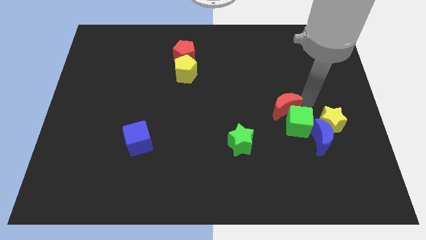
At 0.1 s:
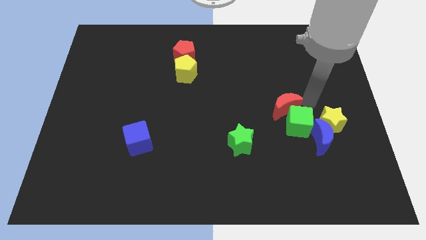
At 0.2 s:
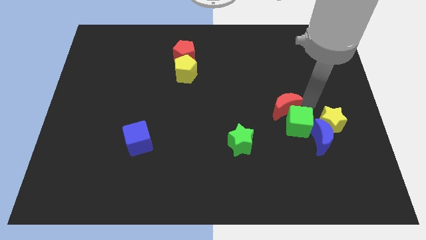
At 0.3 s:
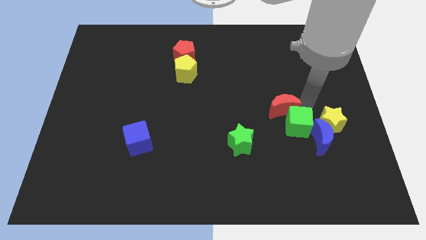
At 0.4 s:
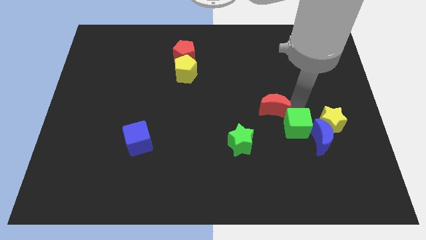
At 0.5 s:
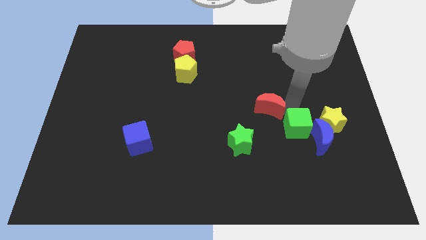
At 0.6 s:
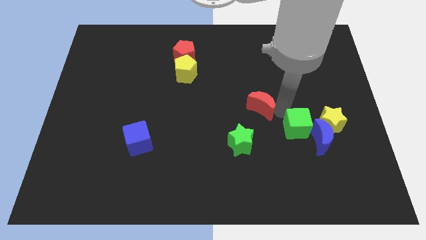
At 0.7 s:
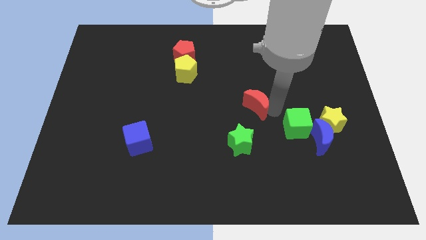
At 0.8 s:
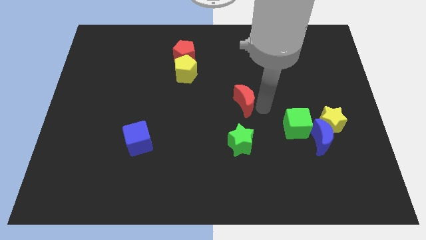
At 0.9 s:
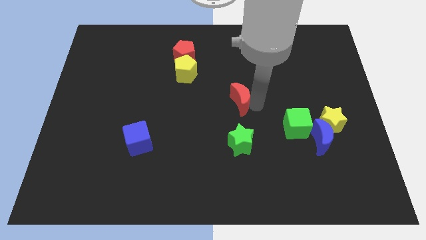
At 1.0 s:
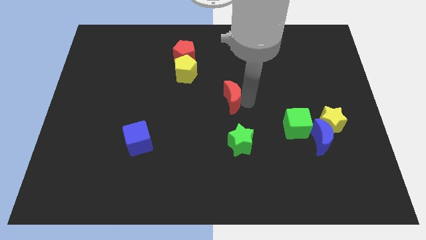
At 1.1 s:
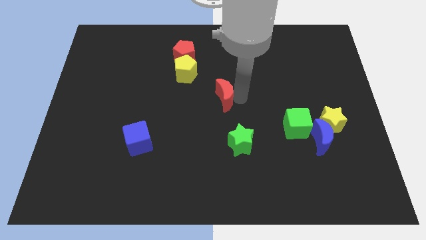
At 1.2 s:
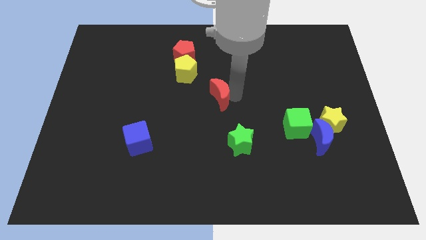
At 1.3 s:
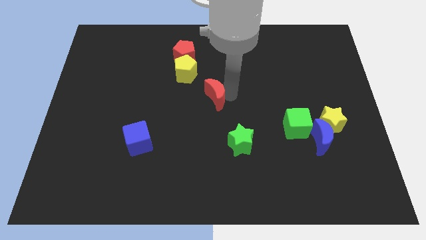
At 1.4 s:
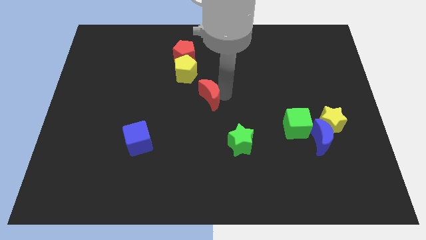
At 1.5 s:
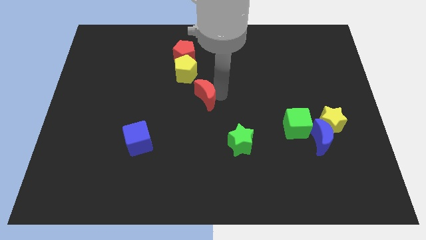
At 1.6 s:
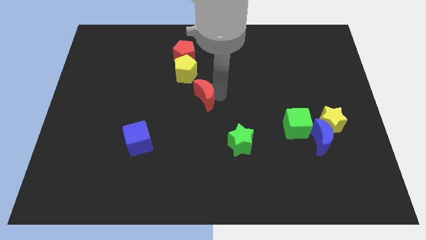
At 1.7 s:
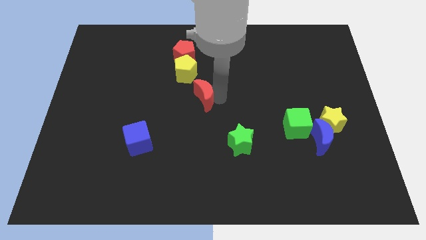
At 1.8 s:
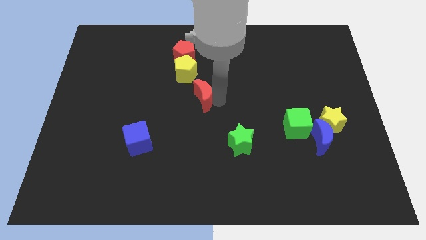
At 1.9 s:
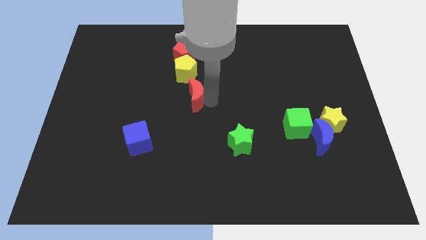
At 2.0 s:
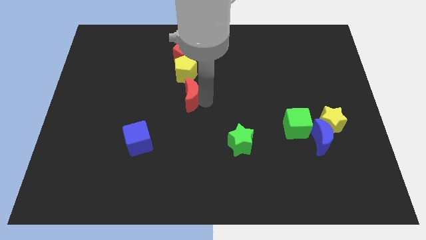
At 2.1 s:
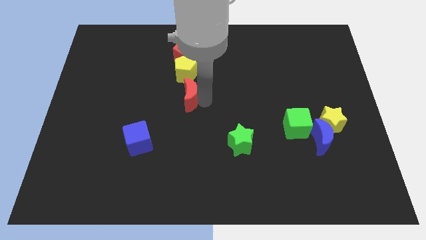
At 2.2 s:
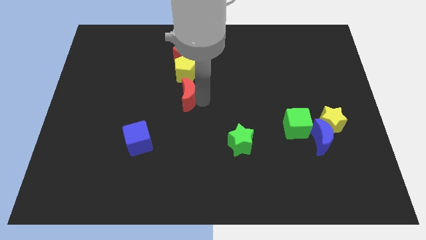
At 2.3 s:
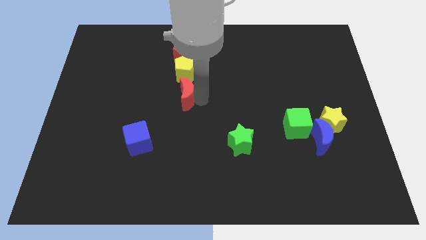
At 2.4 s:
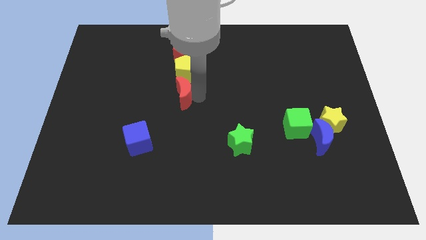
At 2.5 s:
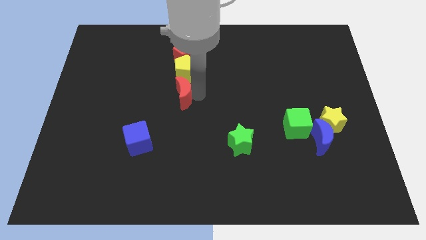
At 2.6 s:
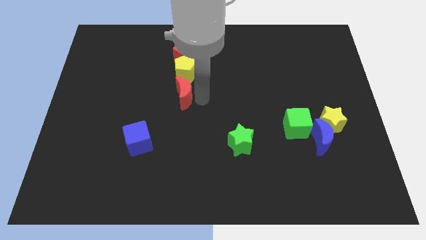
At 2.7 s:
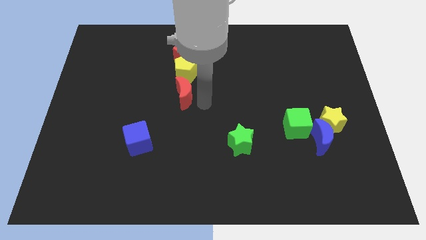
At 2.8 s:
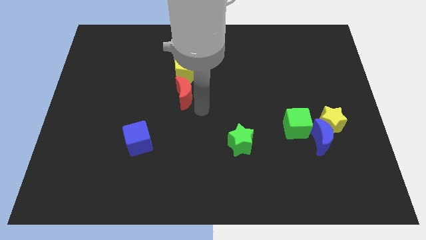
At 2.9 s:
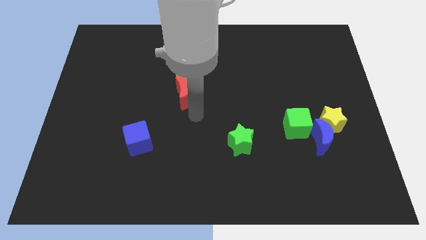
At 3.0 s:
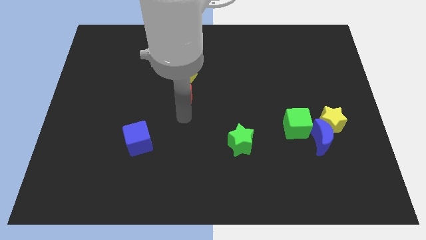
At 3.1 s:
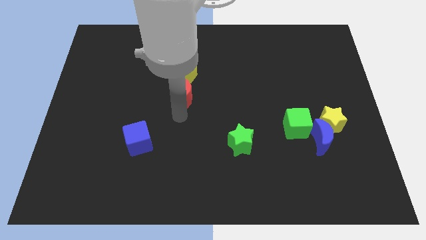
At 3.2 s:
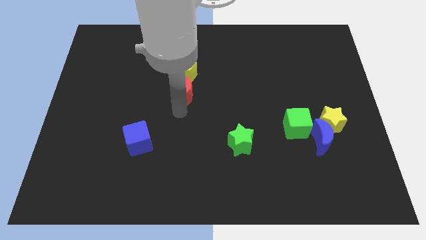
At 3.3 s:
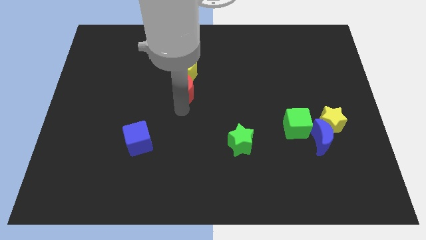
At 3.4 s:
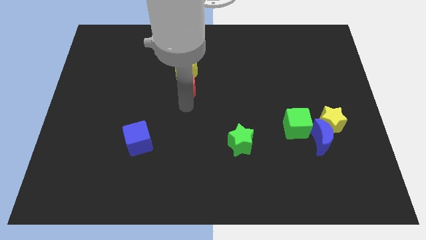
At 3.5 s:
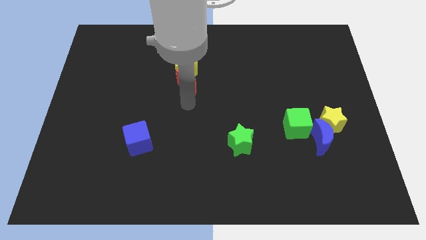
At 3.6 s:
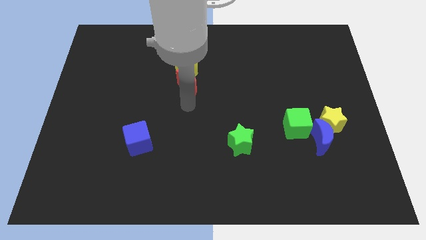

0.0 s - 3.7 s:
place the red moon below the yellow pentagon

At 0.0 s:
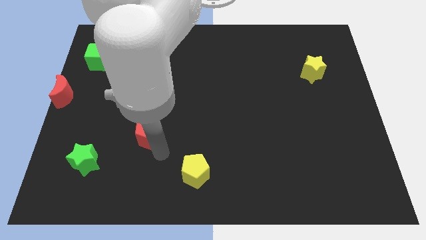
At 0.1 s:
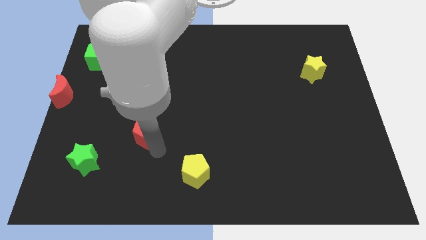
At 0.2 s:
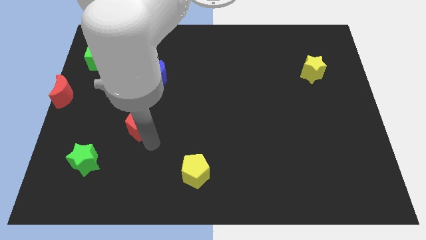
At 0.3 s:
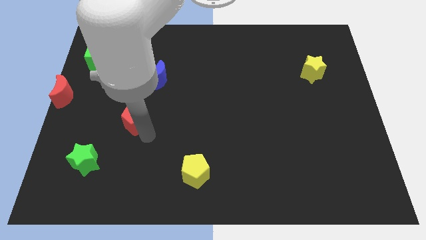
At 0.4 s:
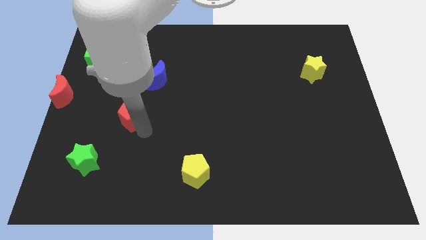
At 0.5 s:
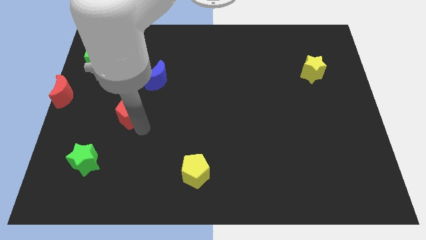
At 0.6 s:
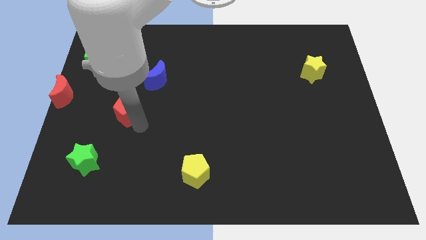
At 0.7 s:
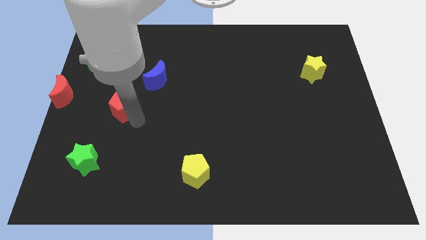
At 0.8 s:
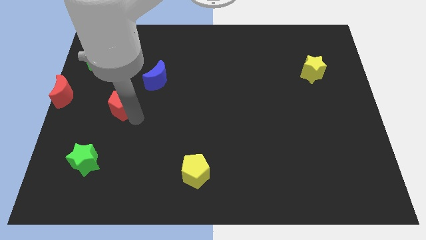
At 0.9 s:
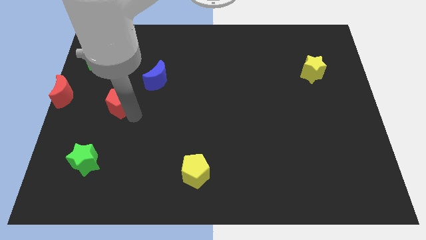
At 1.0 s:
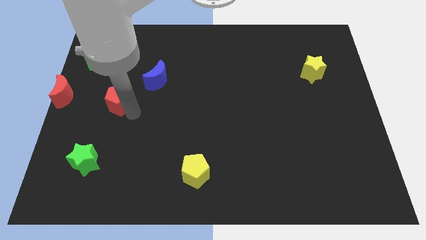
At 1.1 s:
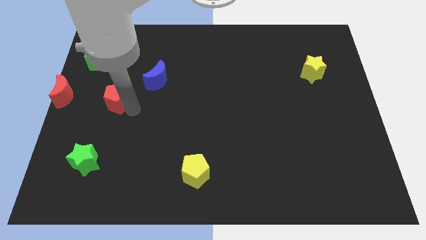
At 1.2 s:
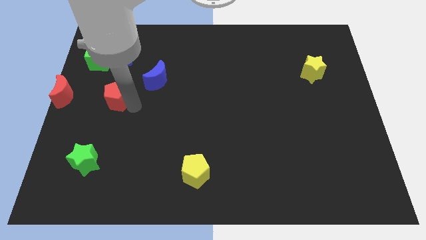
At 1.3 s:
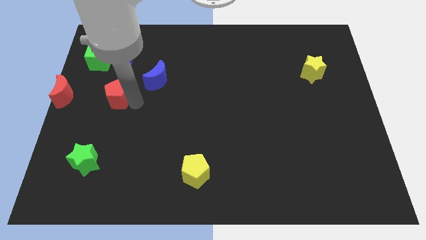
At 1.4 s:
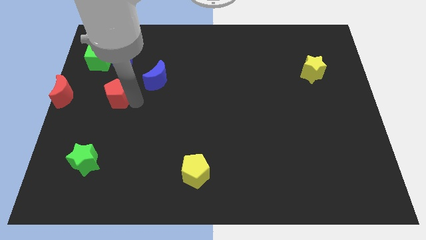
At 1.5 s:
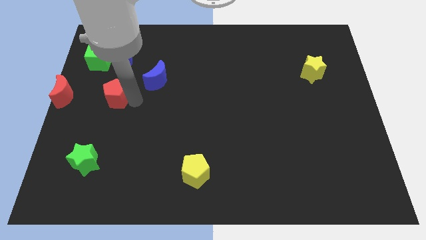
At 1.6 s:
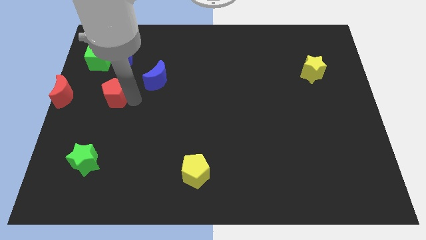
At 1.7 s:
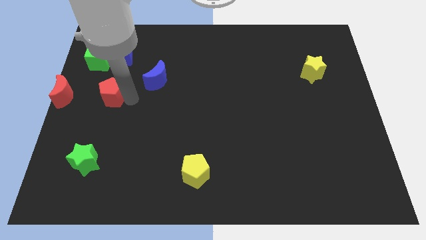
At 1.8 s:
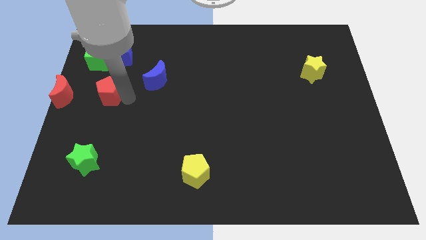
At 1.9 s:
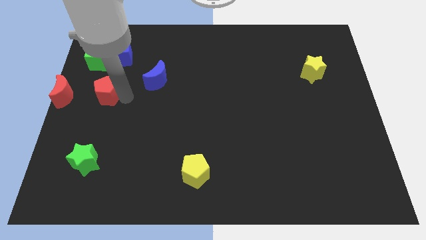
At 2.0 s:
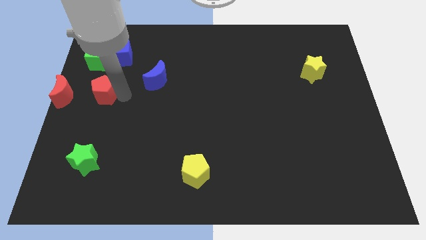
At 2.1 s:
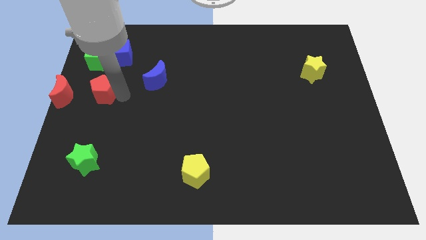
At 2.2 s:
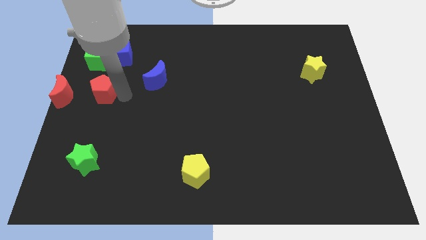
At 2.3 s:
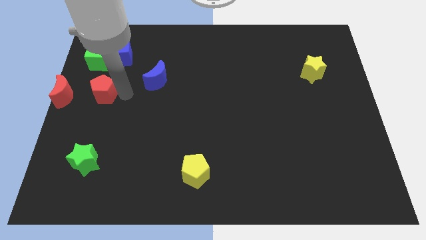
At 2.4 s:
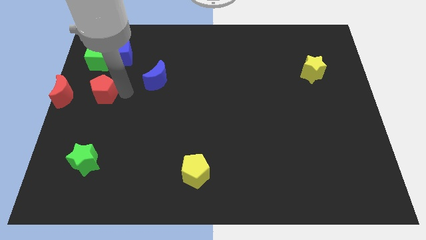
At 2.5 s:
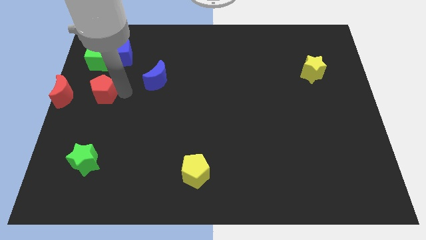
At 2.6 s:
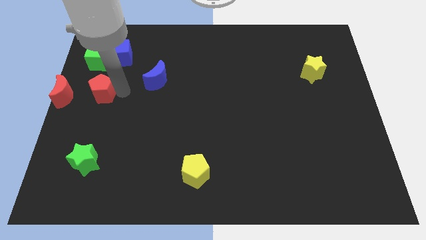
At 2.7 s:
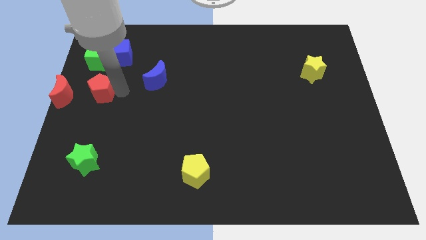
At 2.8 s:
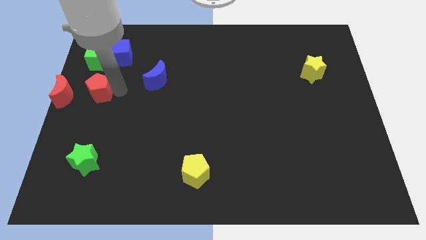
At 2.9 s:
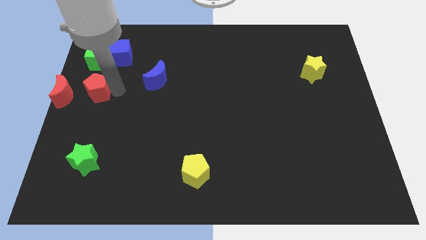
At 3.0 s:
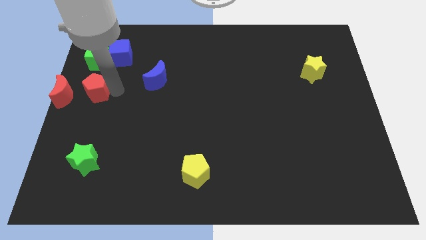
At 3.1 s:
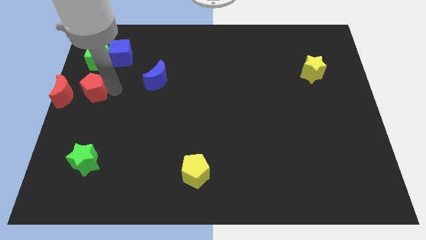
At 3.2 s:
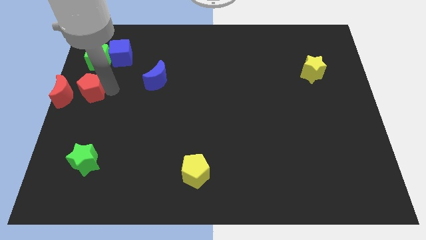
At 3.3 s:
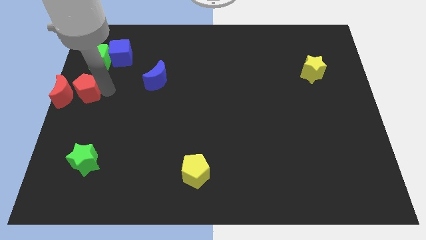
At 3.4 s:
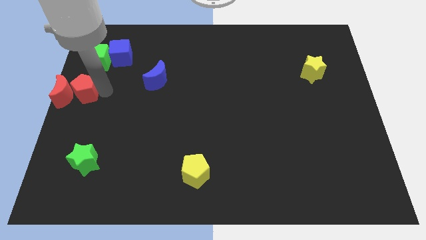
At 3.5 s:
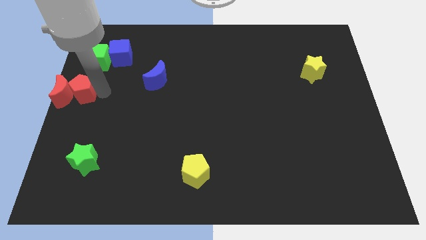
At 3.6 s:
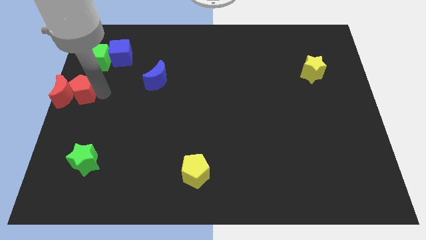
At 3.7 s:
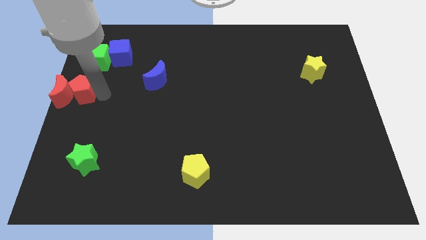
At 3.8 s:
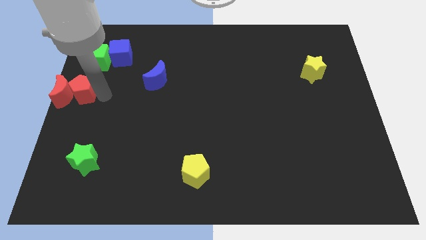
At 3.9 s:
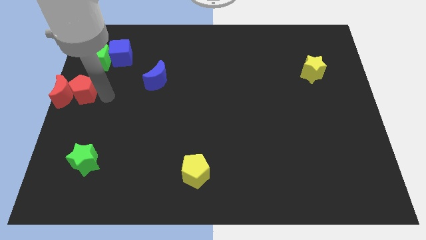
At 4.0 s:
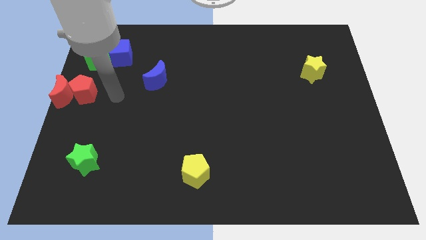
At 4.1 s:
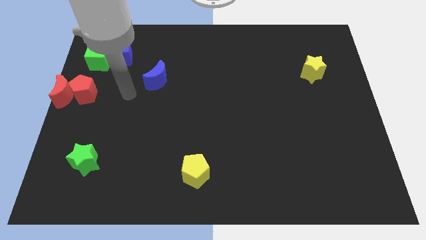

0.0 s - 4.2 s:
push the red pentagon next to the red moon

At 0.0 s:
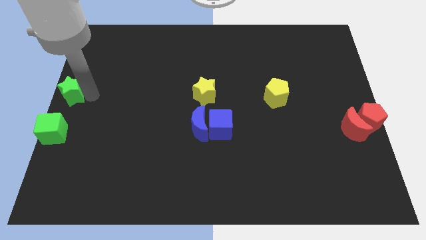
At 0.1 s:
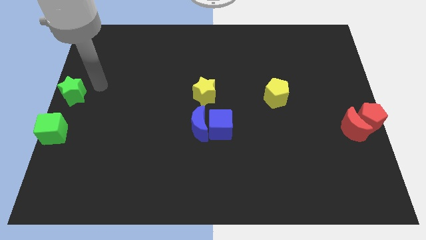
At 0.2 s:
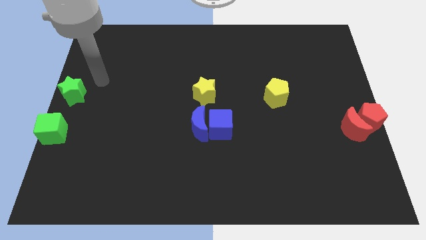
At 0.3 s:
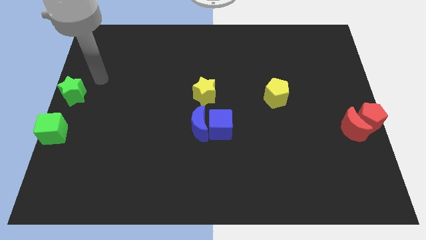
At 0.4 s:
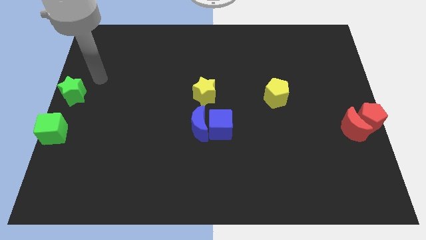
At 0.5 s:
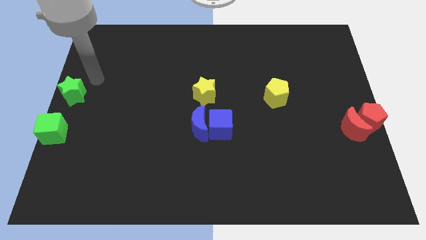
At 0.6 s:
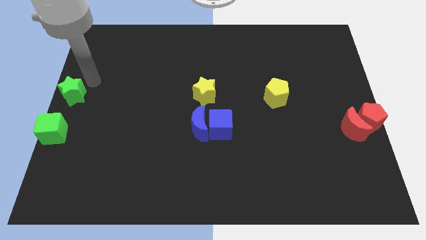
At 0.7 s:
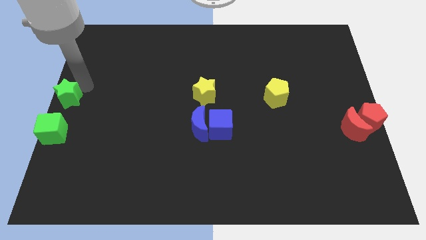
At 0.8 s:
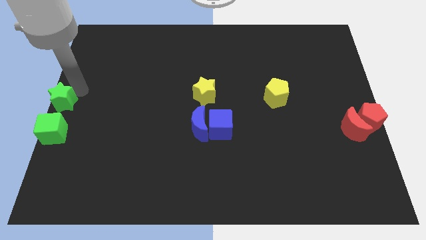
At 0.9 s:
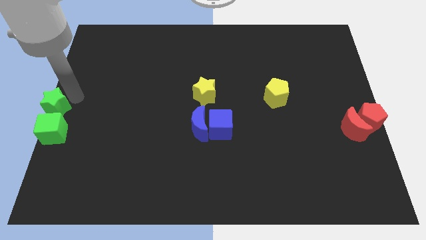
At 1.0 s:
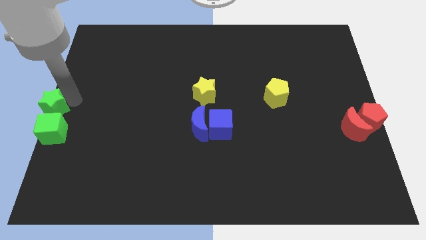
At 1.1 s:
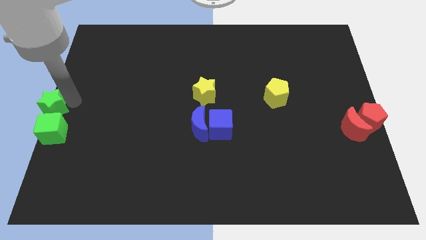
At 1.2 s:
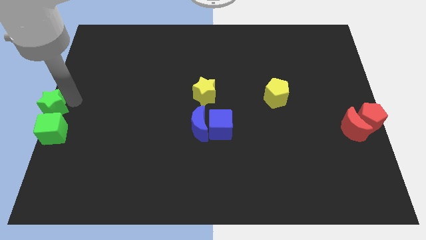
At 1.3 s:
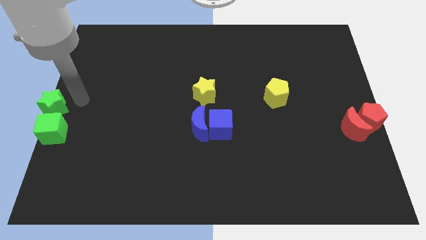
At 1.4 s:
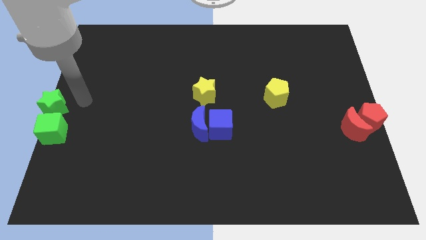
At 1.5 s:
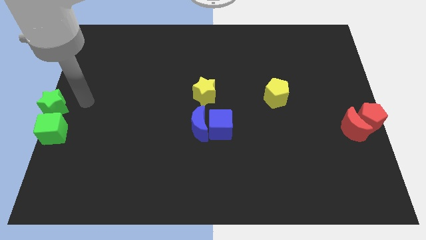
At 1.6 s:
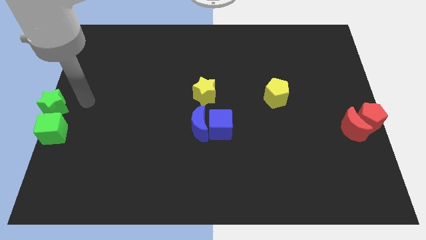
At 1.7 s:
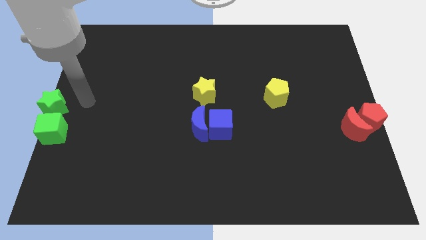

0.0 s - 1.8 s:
place green star top of the green cube
